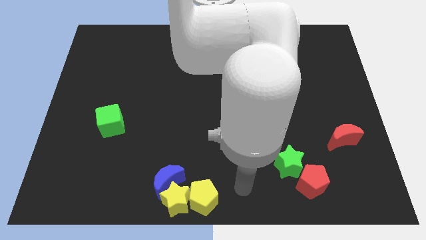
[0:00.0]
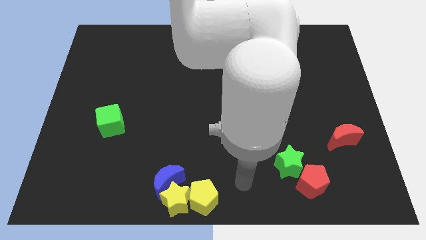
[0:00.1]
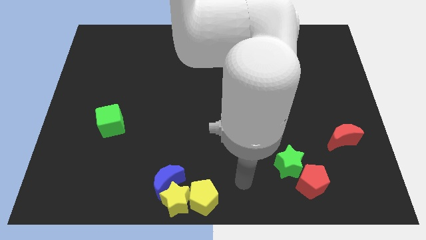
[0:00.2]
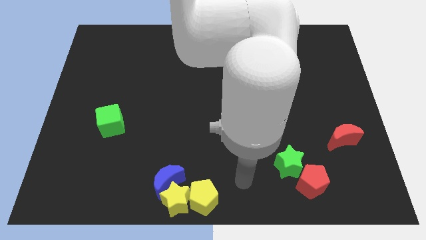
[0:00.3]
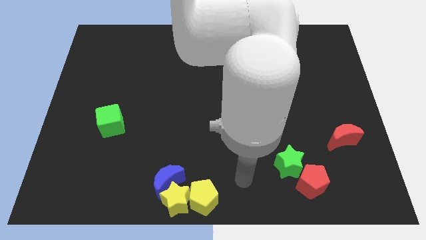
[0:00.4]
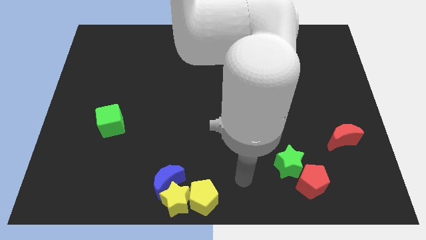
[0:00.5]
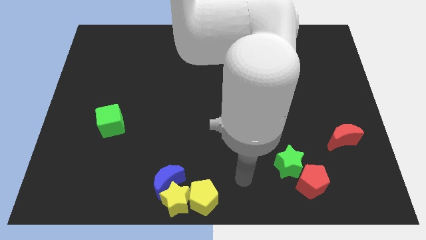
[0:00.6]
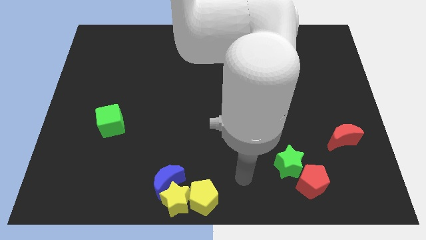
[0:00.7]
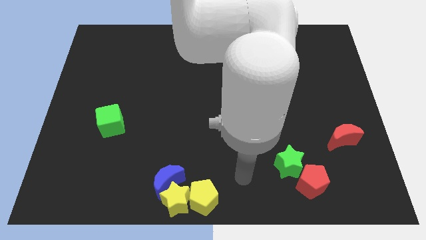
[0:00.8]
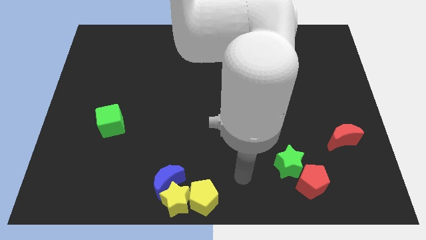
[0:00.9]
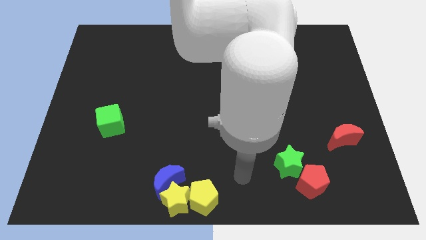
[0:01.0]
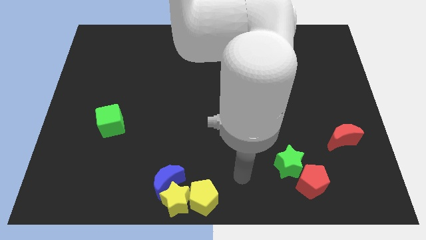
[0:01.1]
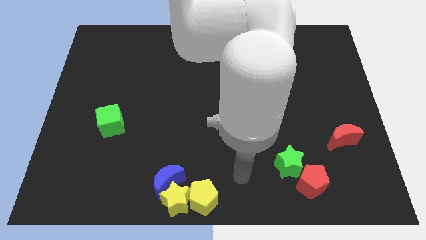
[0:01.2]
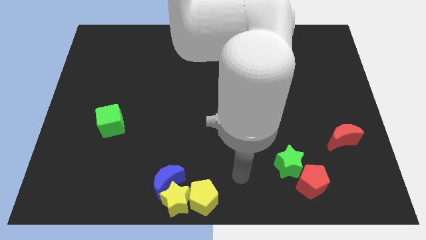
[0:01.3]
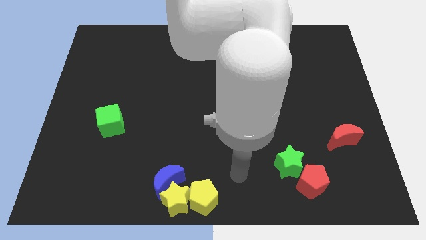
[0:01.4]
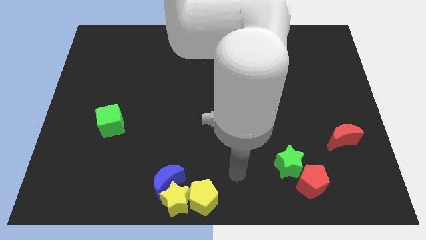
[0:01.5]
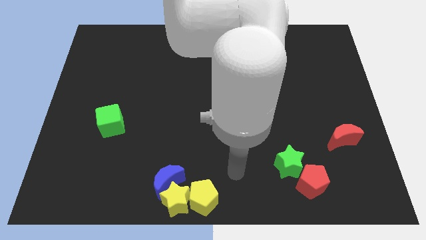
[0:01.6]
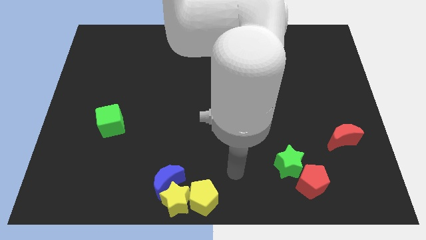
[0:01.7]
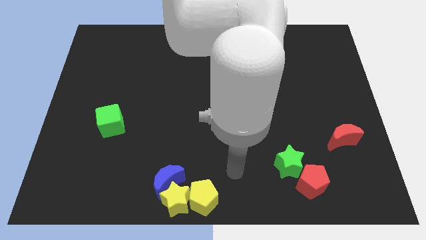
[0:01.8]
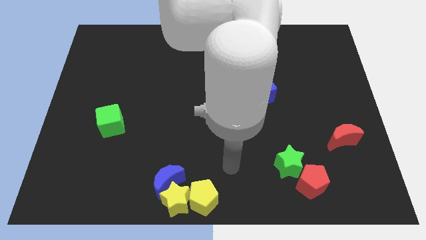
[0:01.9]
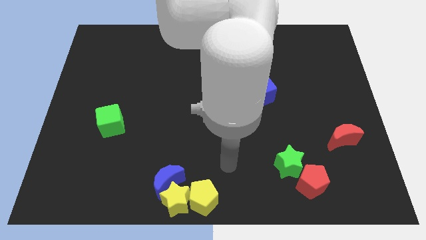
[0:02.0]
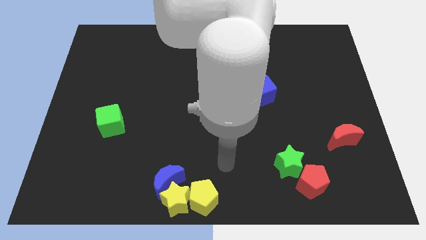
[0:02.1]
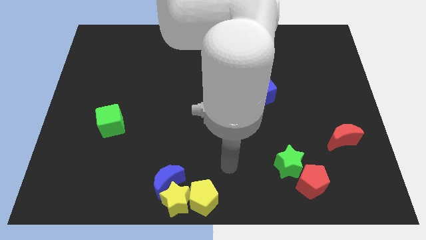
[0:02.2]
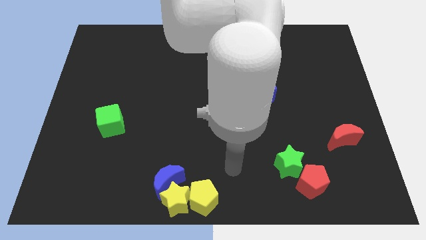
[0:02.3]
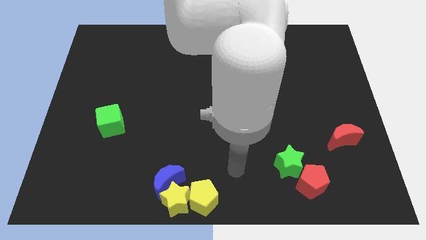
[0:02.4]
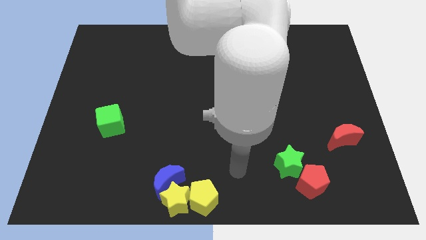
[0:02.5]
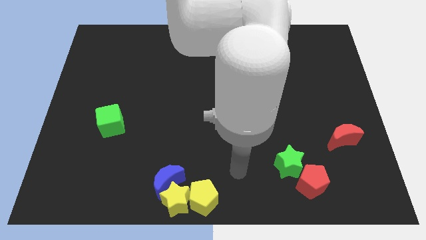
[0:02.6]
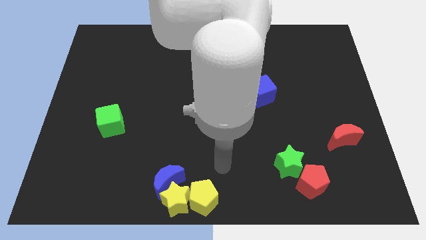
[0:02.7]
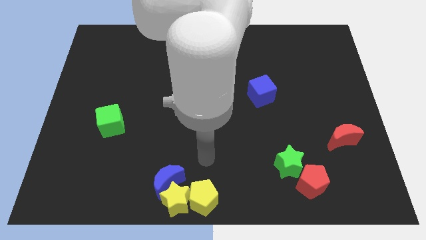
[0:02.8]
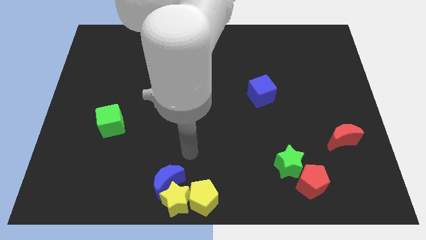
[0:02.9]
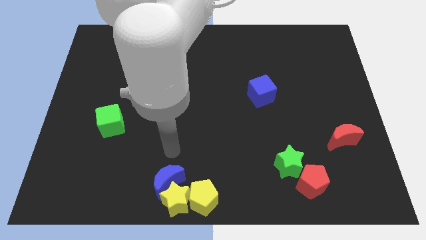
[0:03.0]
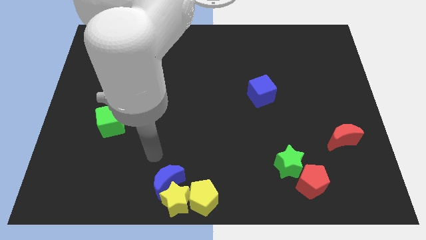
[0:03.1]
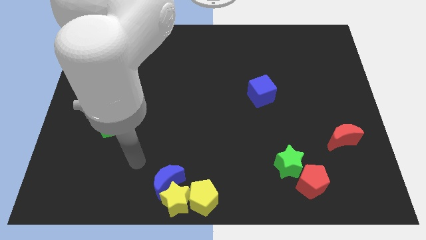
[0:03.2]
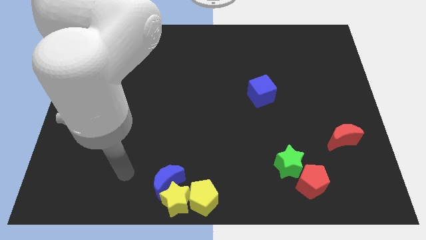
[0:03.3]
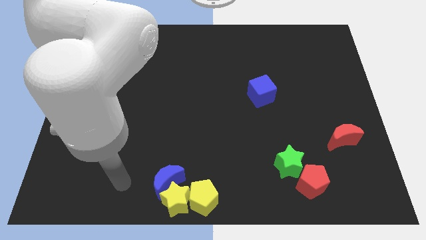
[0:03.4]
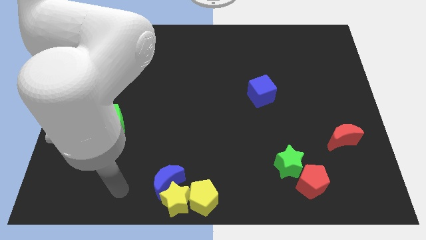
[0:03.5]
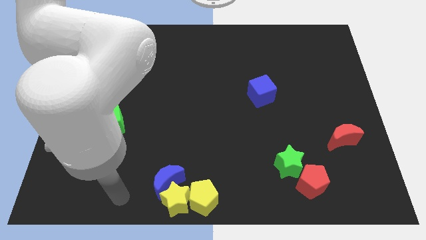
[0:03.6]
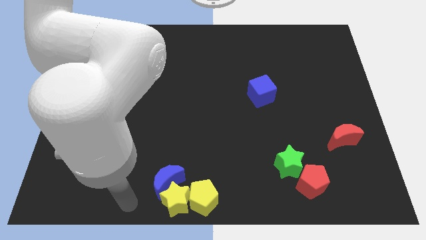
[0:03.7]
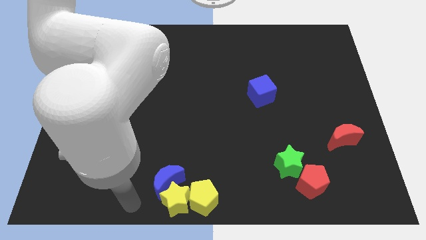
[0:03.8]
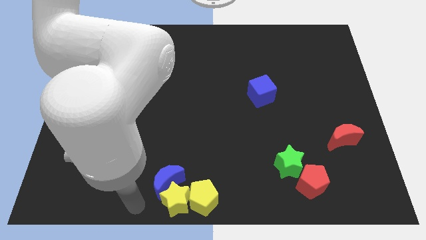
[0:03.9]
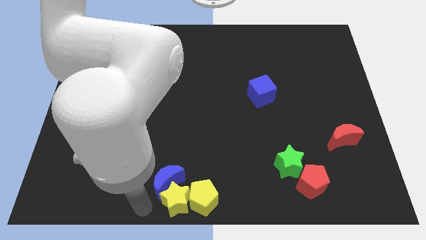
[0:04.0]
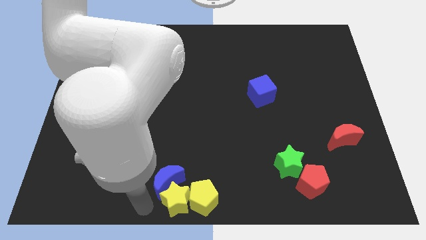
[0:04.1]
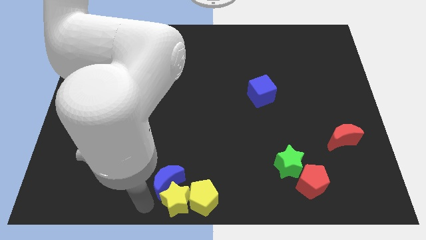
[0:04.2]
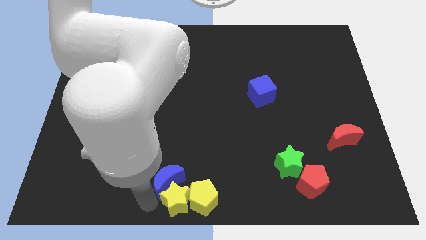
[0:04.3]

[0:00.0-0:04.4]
move your arm to the bottom of the blue crescent

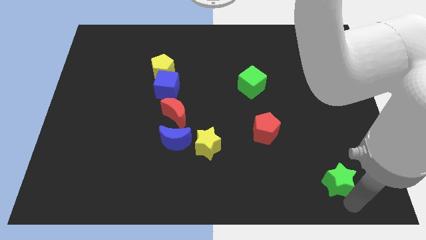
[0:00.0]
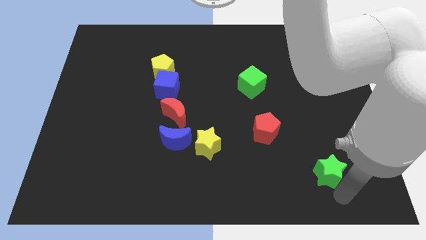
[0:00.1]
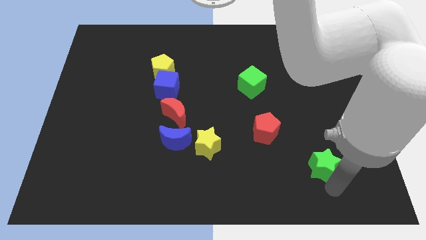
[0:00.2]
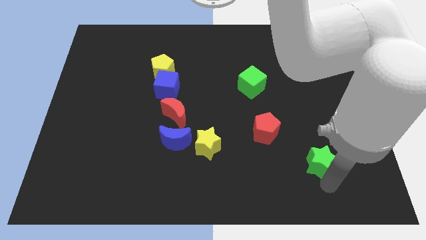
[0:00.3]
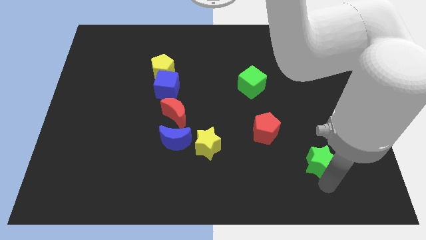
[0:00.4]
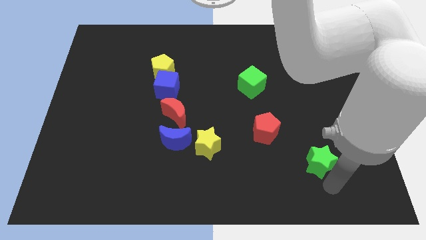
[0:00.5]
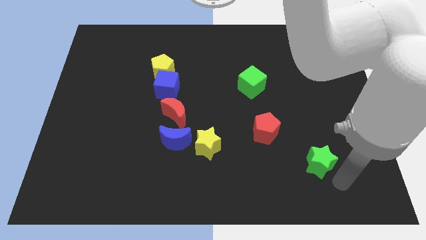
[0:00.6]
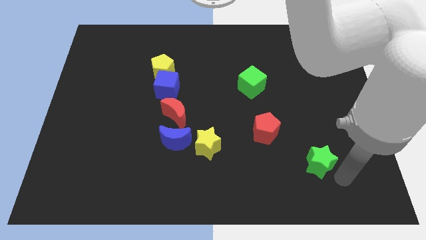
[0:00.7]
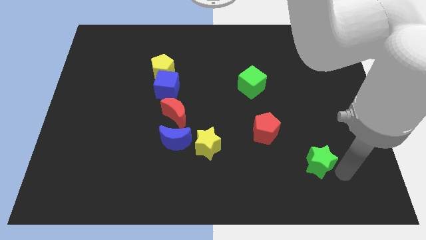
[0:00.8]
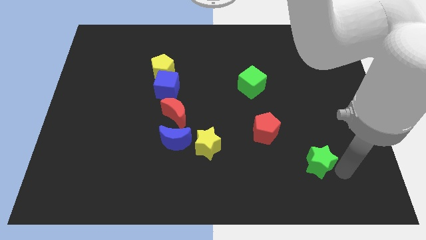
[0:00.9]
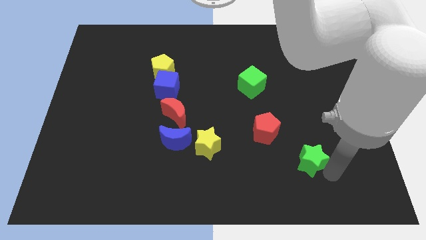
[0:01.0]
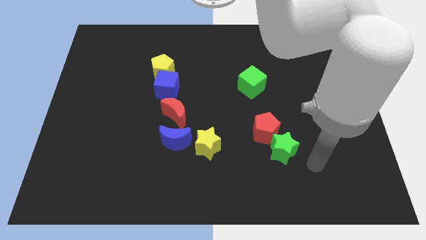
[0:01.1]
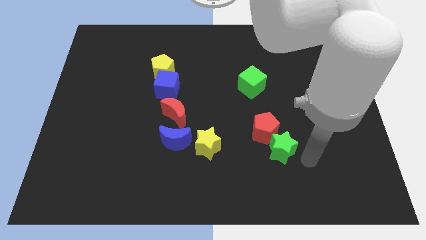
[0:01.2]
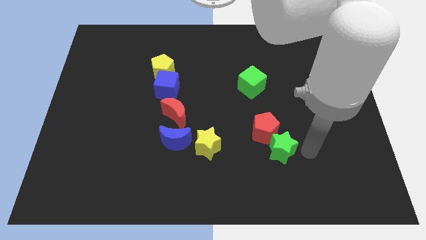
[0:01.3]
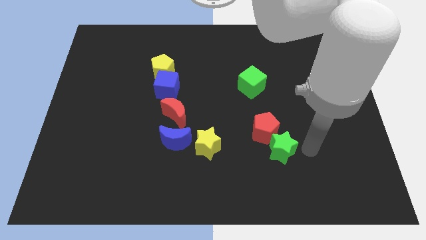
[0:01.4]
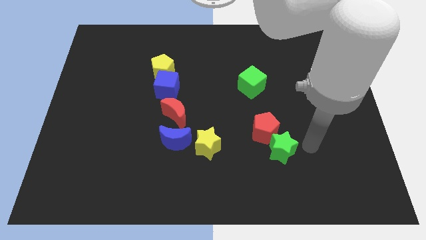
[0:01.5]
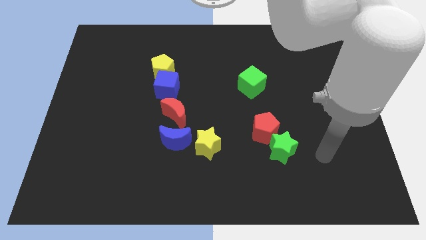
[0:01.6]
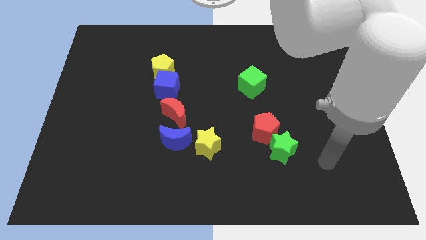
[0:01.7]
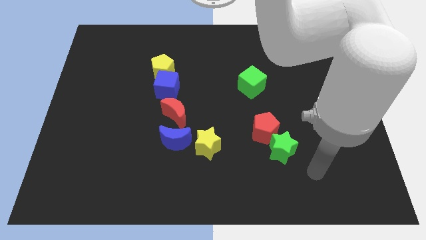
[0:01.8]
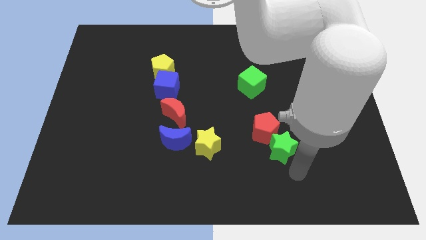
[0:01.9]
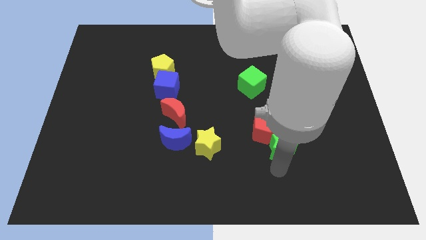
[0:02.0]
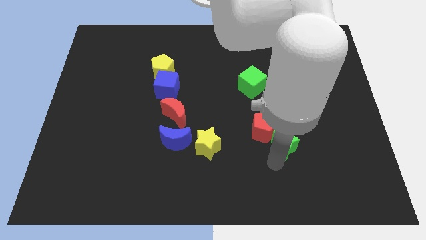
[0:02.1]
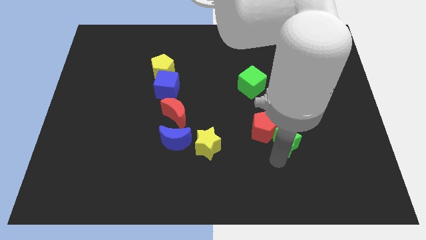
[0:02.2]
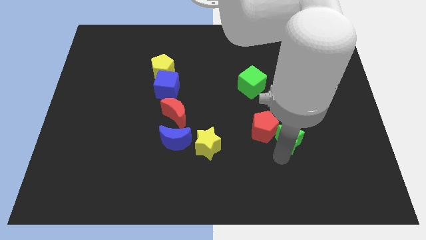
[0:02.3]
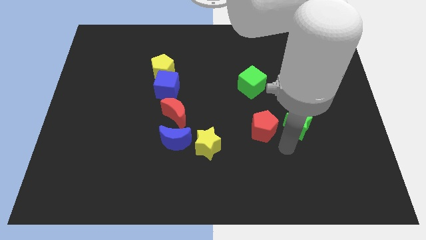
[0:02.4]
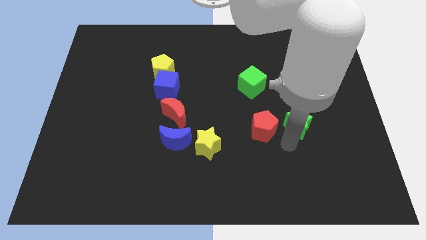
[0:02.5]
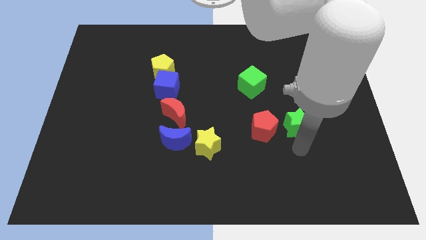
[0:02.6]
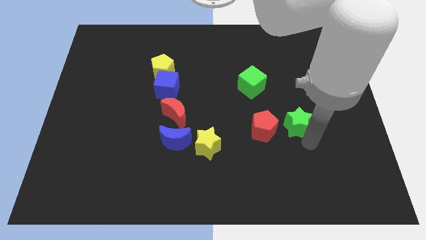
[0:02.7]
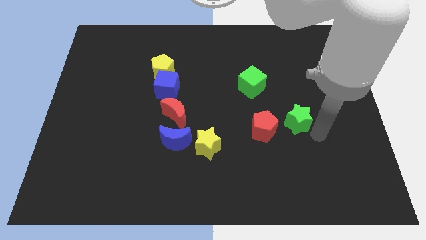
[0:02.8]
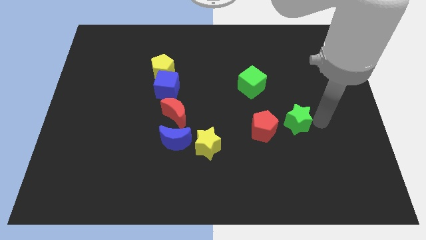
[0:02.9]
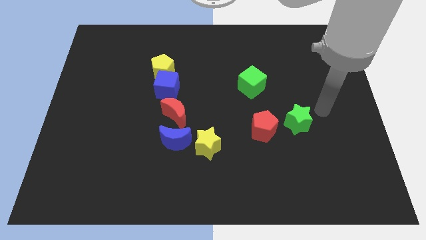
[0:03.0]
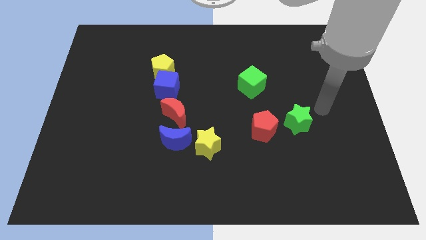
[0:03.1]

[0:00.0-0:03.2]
move the green star to the right side of the red pentagon

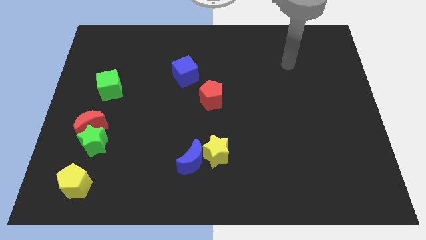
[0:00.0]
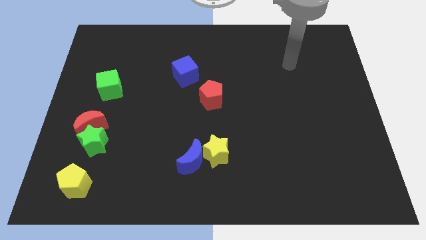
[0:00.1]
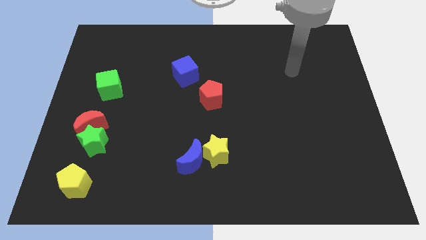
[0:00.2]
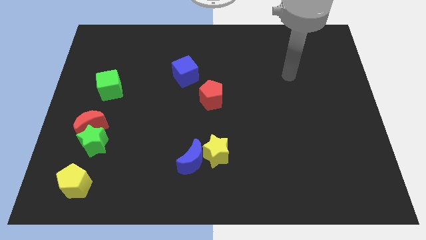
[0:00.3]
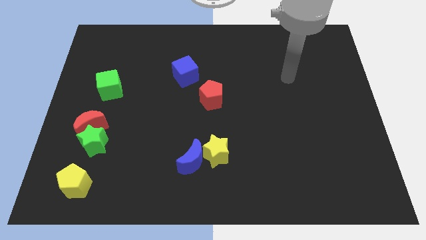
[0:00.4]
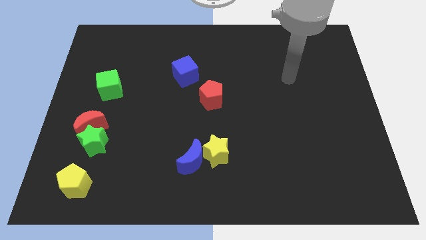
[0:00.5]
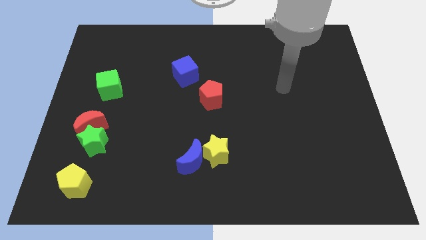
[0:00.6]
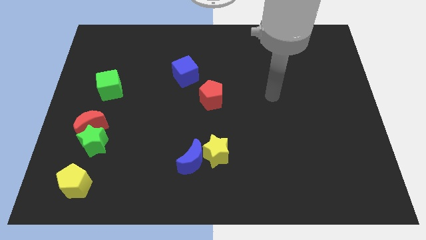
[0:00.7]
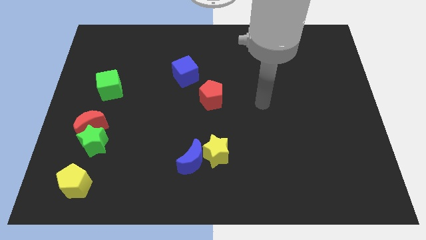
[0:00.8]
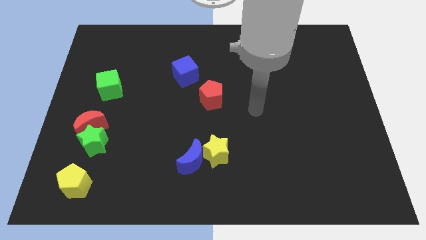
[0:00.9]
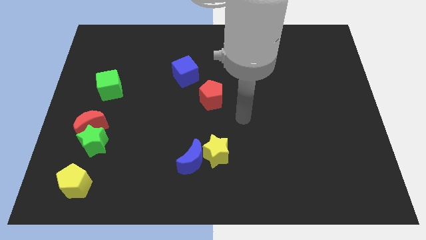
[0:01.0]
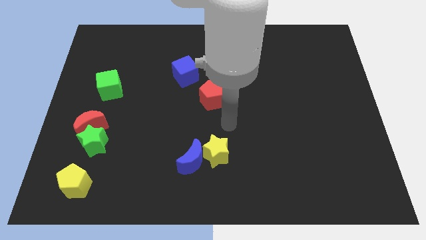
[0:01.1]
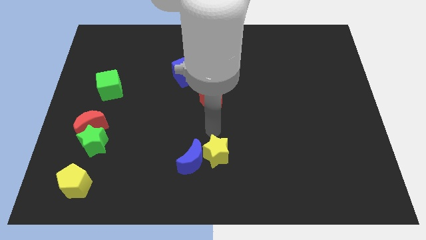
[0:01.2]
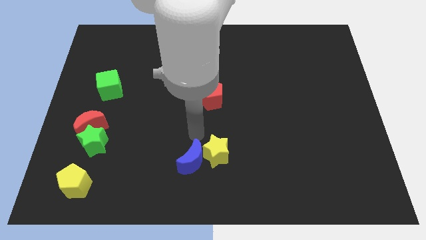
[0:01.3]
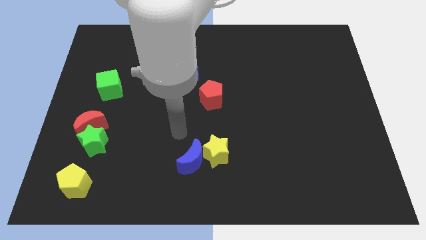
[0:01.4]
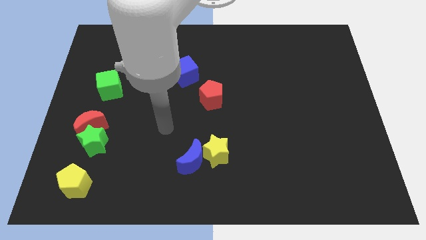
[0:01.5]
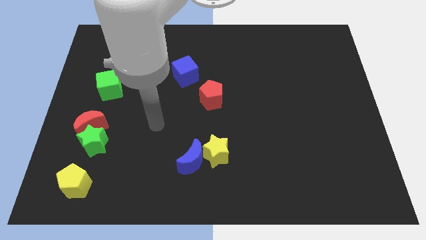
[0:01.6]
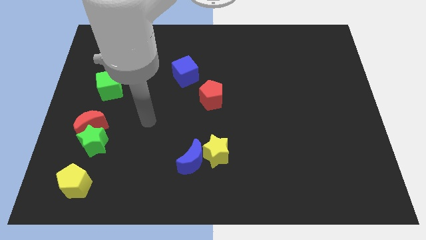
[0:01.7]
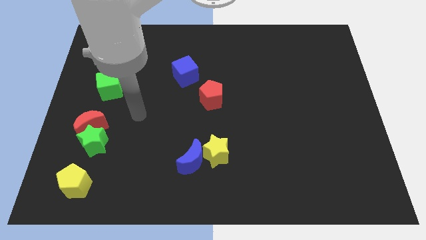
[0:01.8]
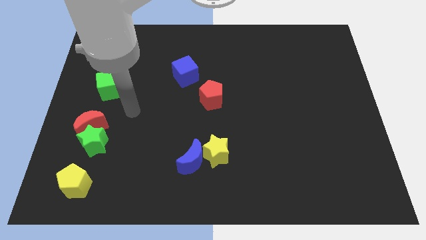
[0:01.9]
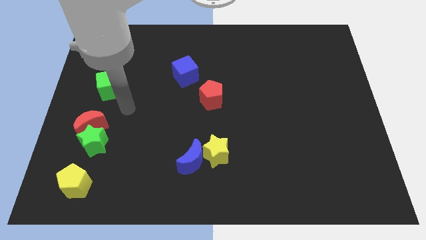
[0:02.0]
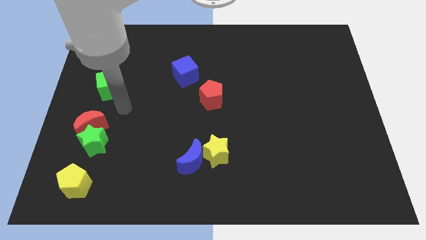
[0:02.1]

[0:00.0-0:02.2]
move the arm towards the green cube
